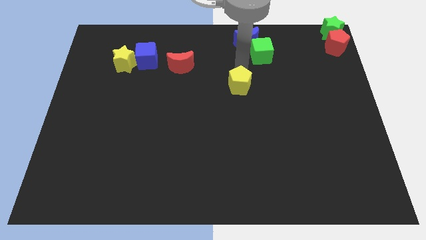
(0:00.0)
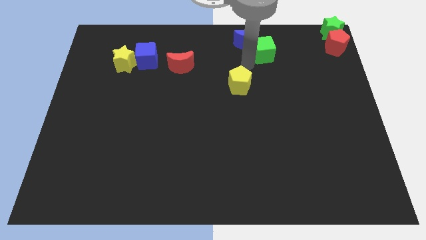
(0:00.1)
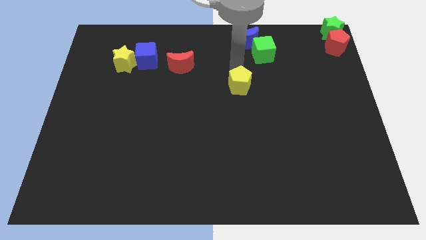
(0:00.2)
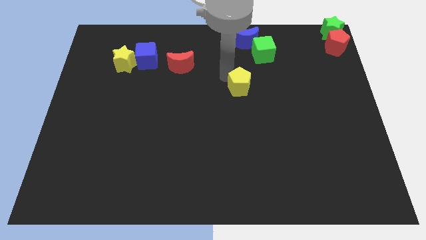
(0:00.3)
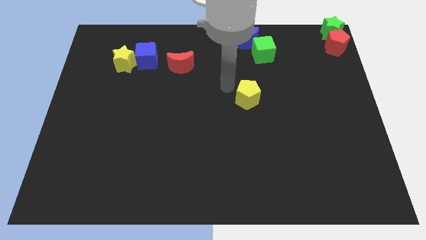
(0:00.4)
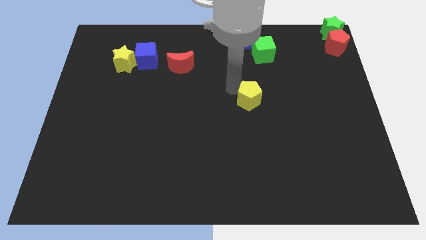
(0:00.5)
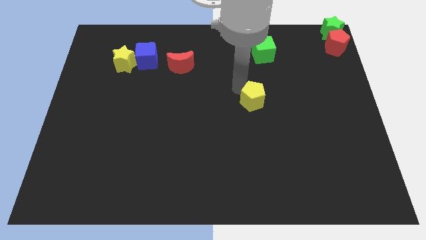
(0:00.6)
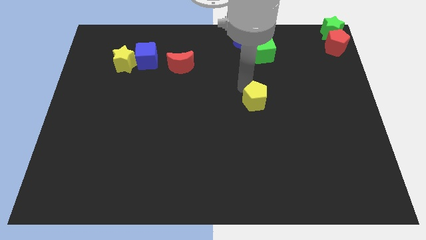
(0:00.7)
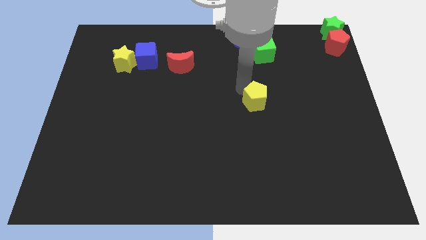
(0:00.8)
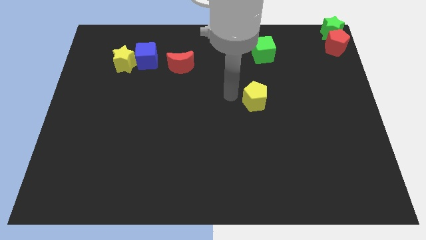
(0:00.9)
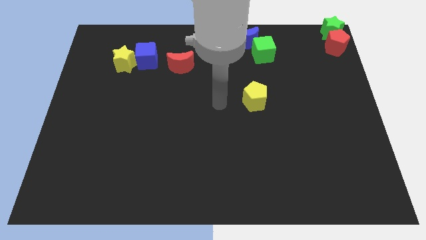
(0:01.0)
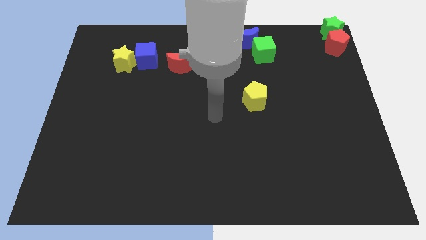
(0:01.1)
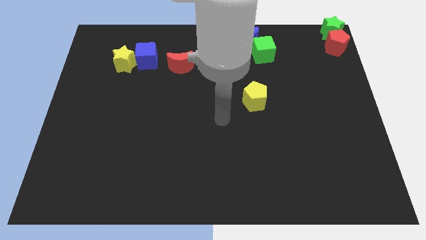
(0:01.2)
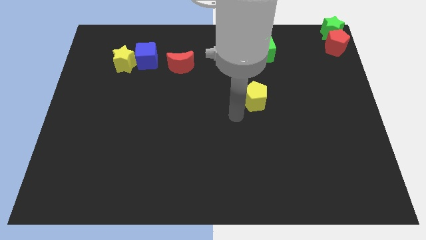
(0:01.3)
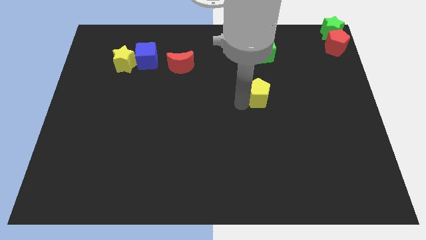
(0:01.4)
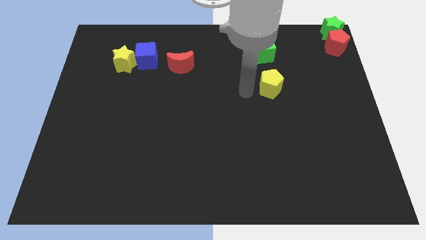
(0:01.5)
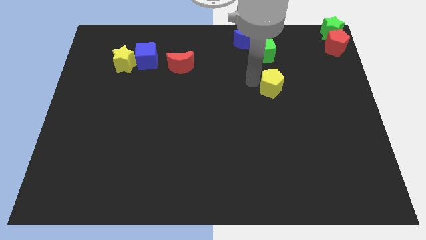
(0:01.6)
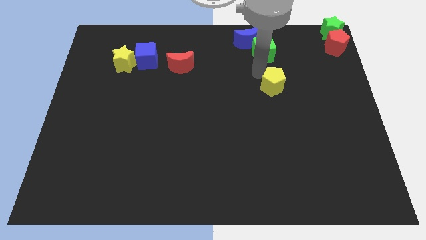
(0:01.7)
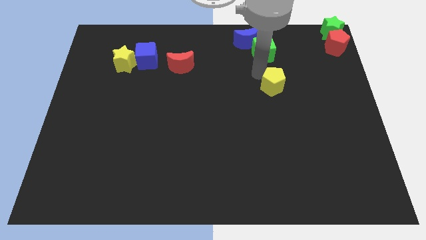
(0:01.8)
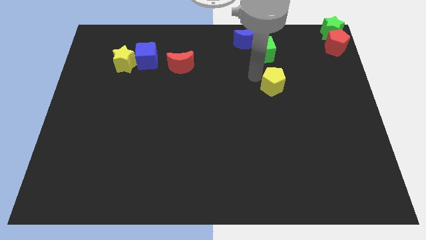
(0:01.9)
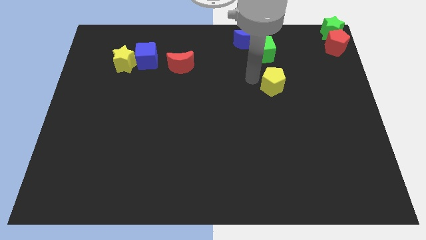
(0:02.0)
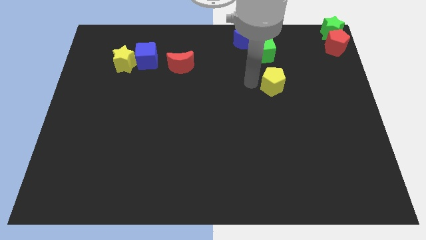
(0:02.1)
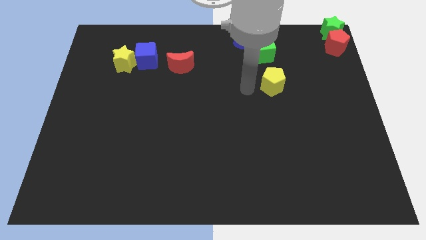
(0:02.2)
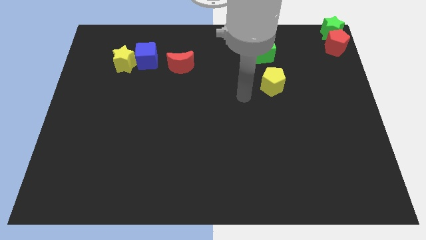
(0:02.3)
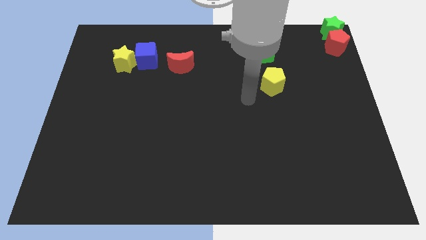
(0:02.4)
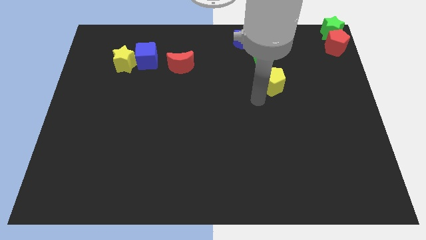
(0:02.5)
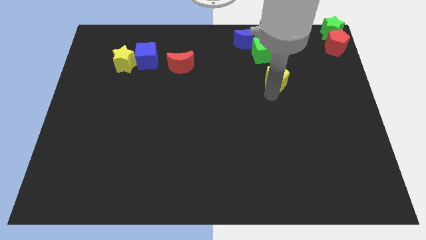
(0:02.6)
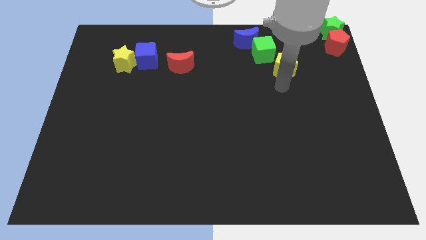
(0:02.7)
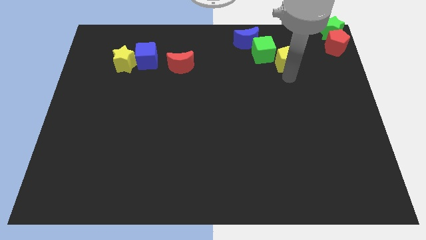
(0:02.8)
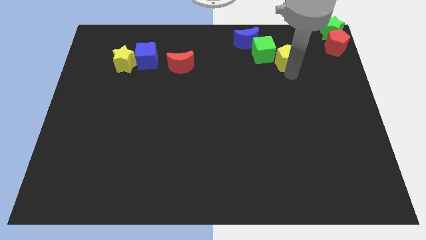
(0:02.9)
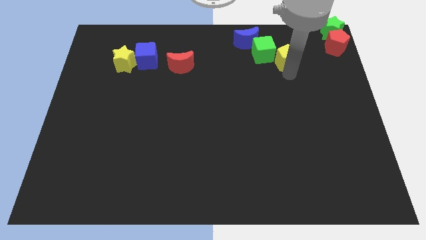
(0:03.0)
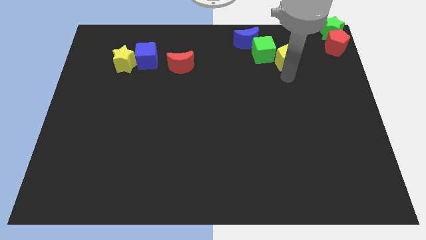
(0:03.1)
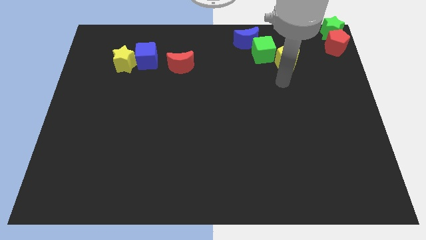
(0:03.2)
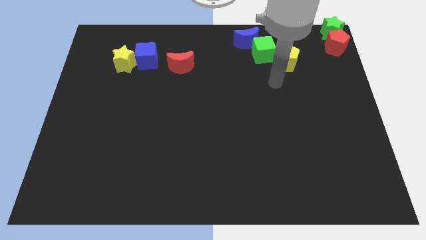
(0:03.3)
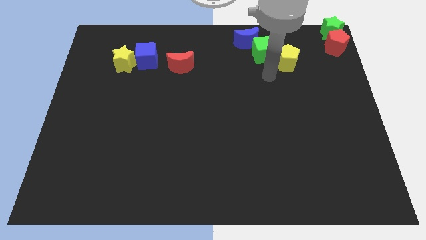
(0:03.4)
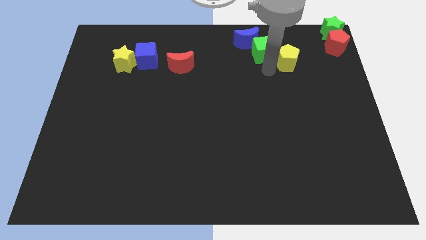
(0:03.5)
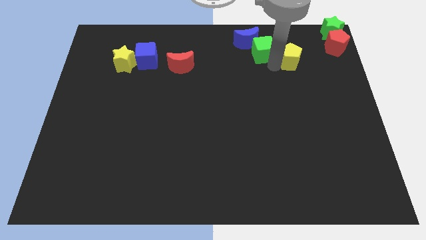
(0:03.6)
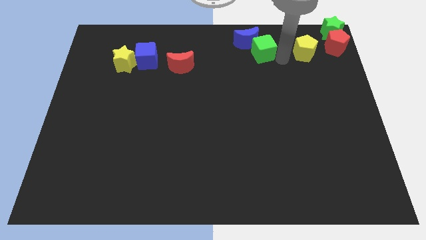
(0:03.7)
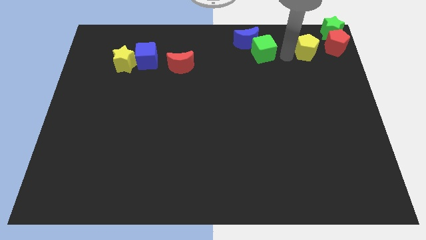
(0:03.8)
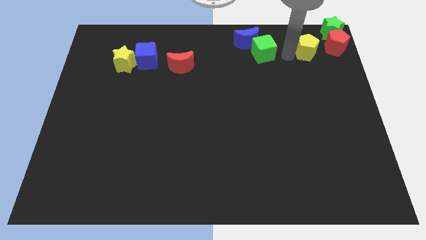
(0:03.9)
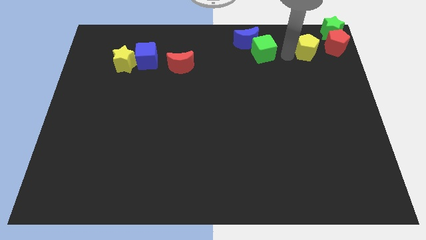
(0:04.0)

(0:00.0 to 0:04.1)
place the yellow pentagon right to the green cube

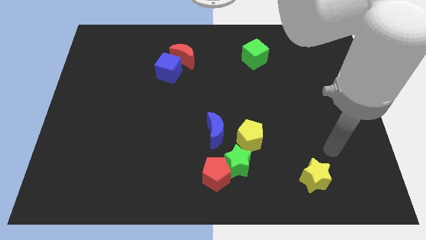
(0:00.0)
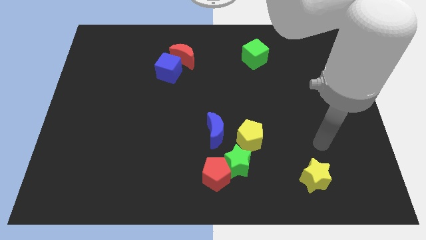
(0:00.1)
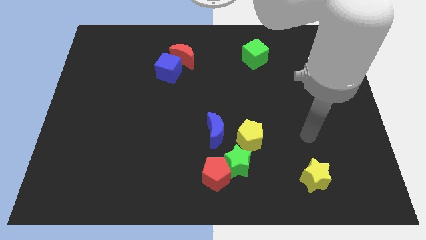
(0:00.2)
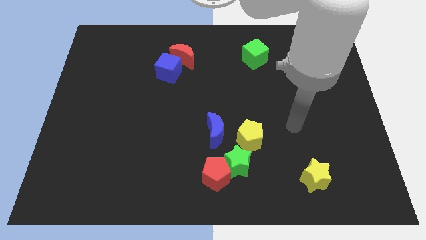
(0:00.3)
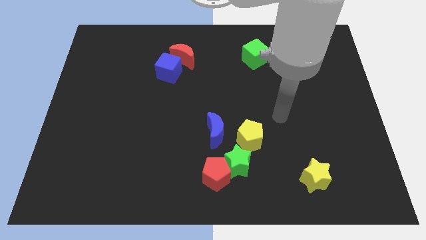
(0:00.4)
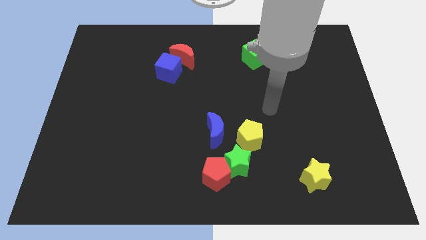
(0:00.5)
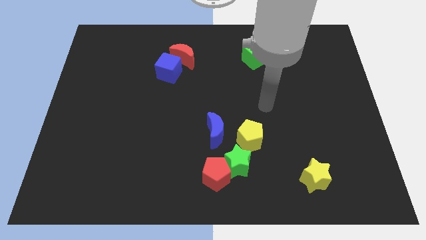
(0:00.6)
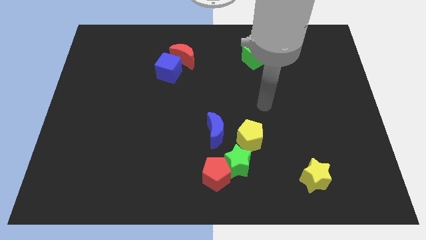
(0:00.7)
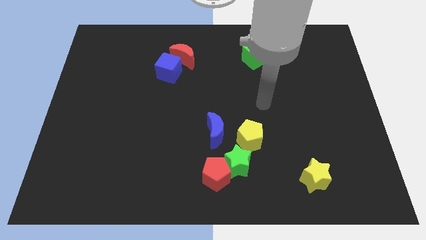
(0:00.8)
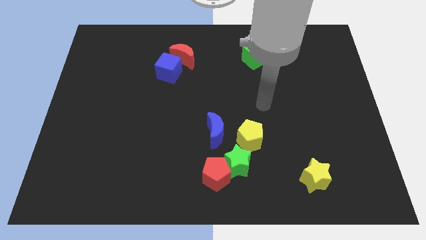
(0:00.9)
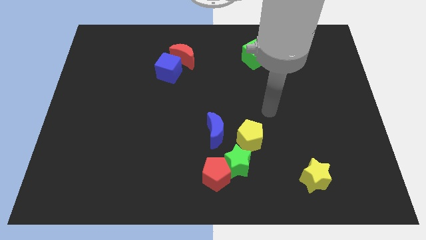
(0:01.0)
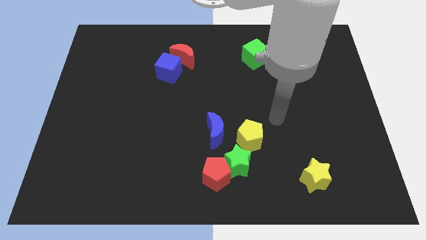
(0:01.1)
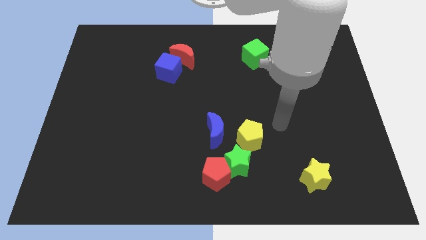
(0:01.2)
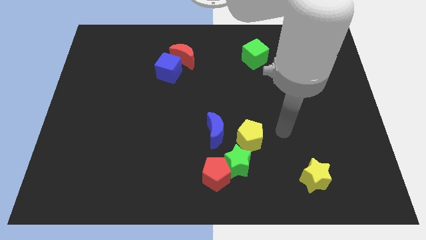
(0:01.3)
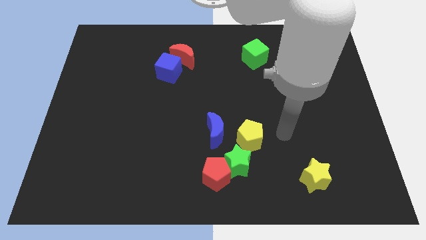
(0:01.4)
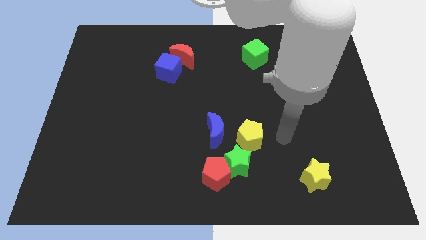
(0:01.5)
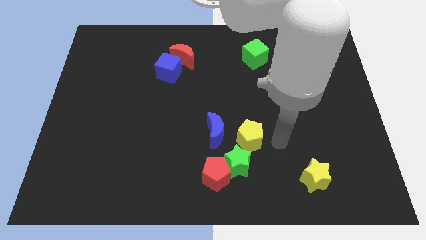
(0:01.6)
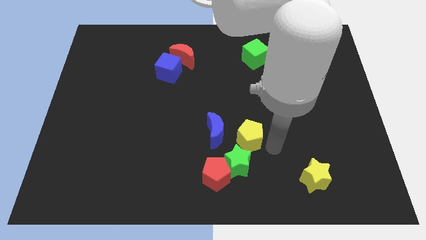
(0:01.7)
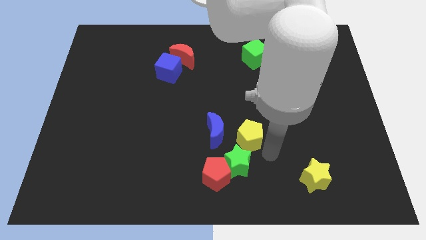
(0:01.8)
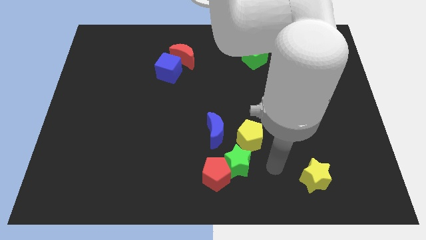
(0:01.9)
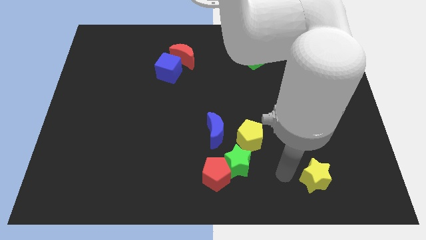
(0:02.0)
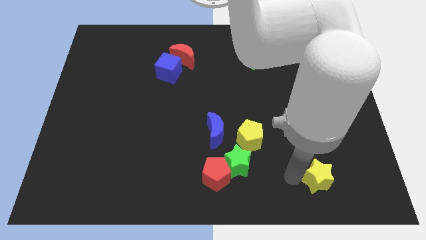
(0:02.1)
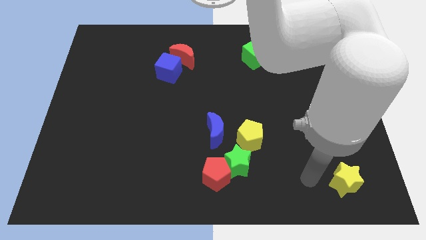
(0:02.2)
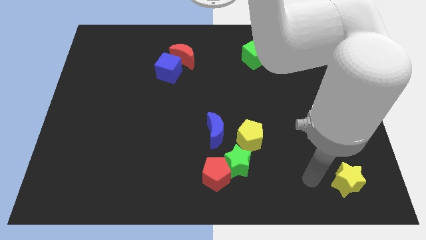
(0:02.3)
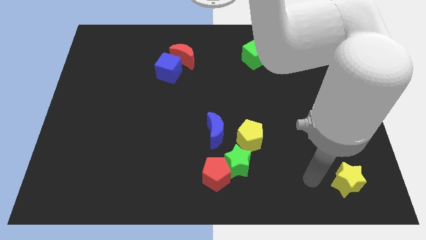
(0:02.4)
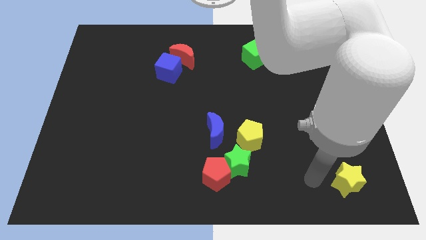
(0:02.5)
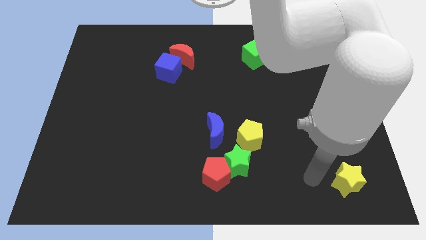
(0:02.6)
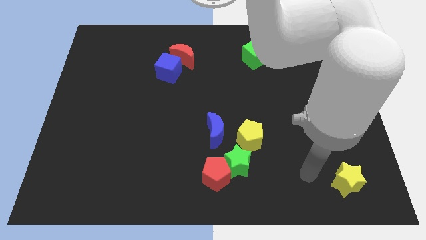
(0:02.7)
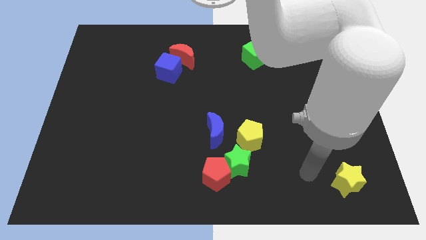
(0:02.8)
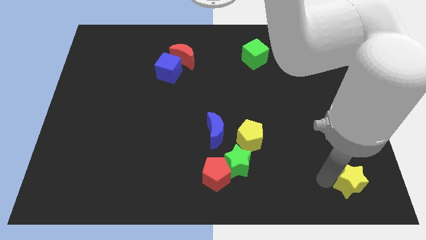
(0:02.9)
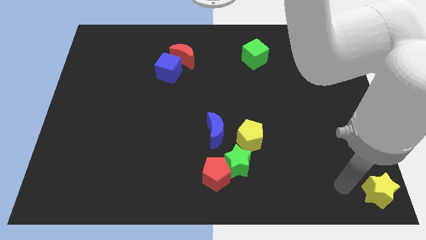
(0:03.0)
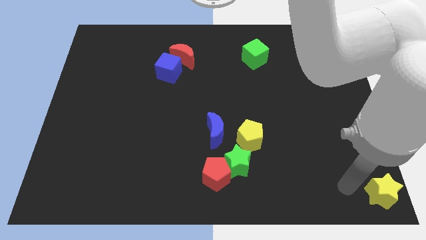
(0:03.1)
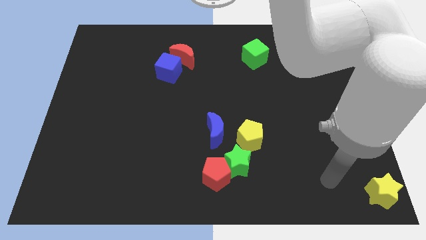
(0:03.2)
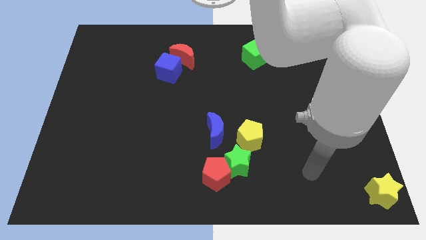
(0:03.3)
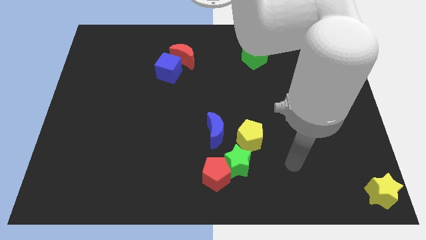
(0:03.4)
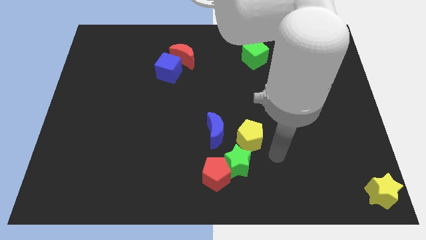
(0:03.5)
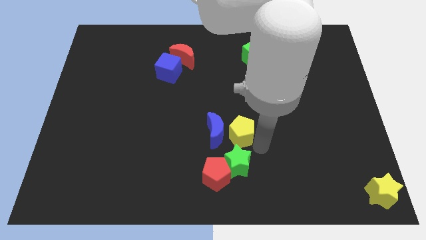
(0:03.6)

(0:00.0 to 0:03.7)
move the yellow star to the bottom right corner

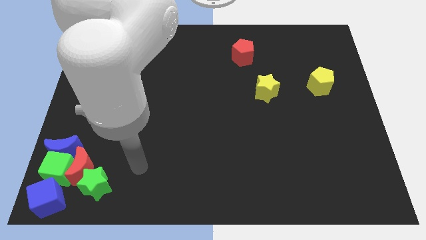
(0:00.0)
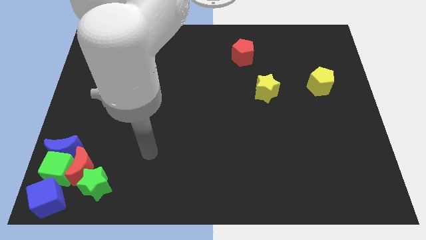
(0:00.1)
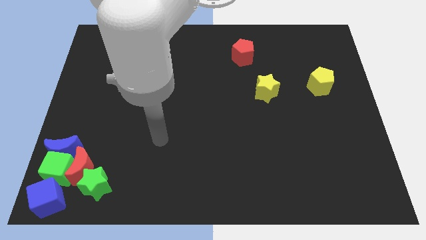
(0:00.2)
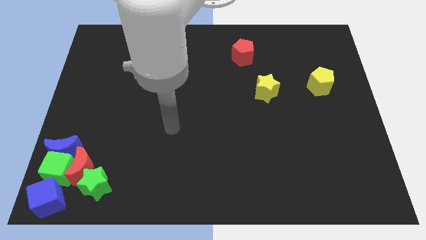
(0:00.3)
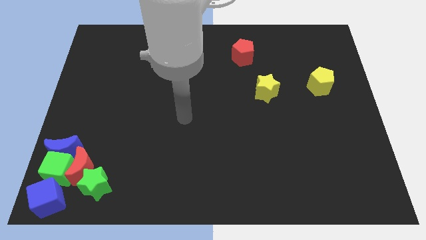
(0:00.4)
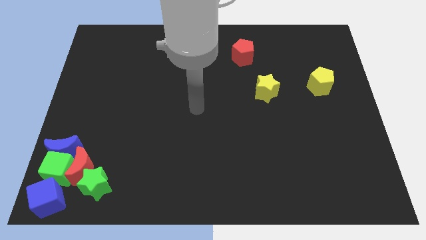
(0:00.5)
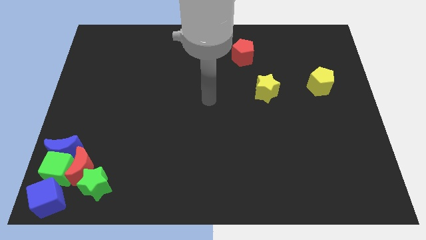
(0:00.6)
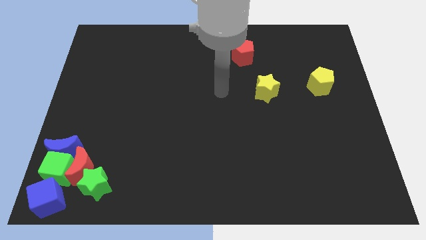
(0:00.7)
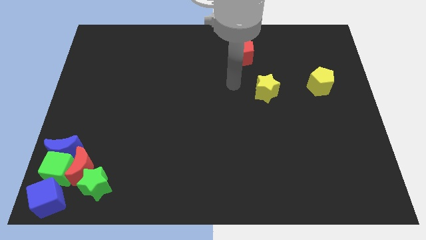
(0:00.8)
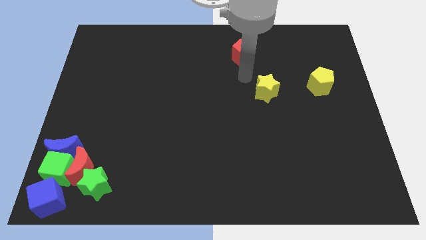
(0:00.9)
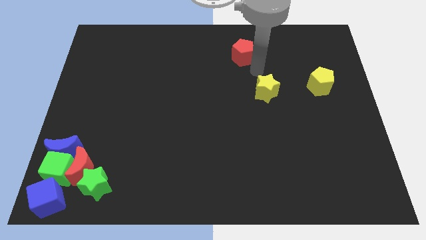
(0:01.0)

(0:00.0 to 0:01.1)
place your arm in between the yellow star and red pentagon
